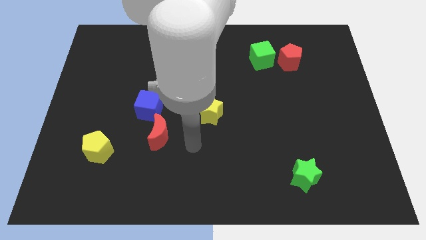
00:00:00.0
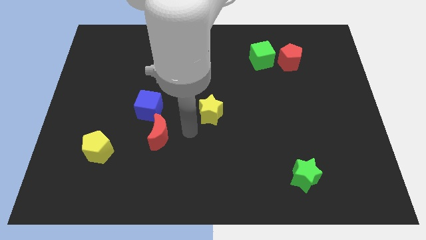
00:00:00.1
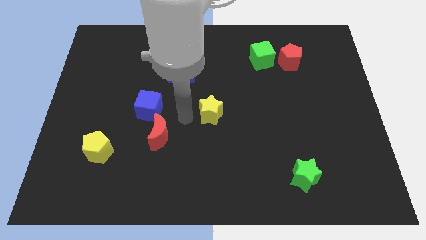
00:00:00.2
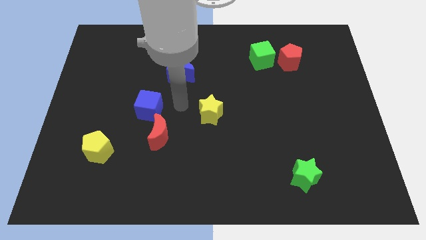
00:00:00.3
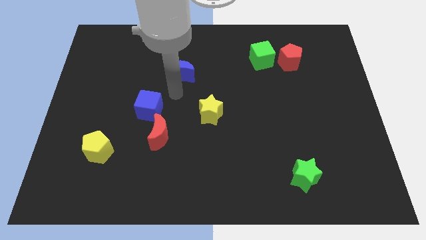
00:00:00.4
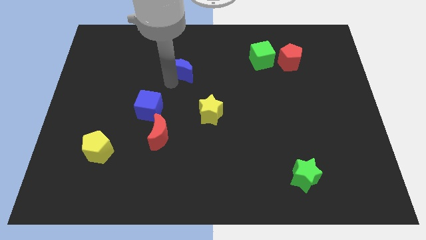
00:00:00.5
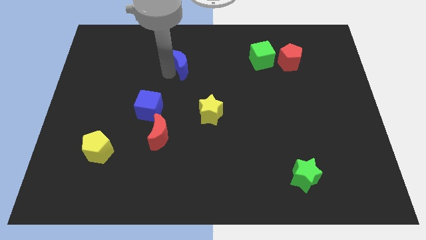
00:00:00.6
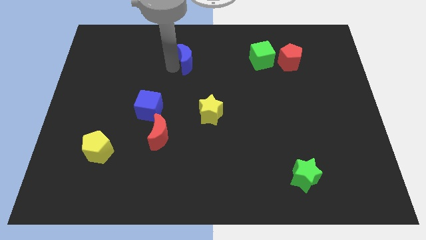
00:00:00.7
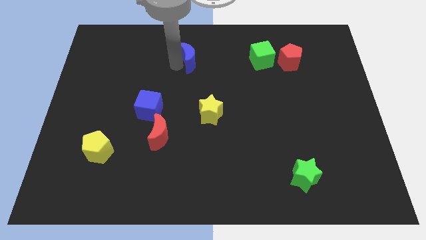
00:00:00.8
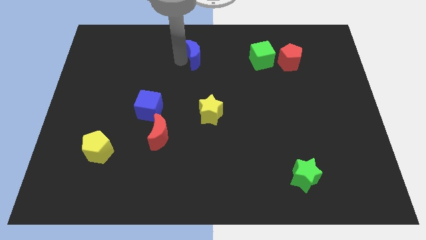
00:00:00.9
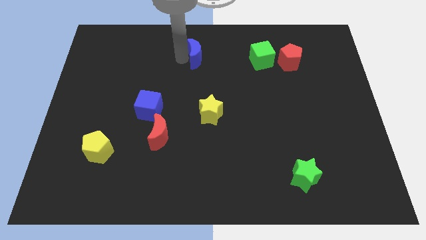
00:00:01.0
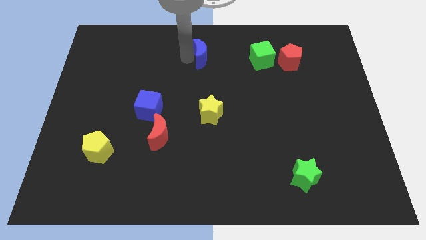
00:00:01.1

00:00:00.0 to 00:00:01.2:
move blue moon upwards slightly

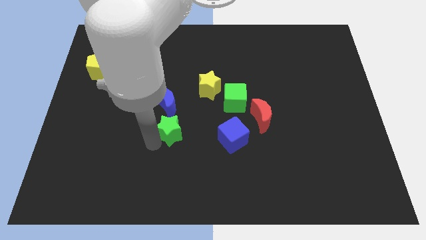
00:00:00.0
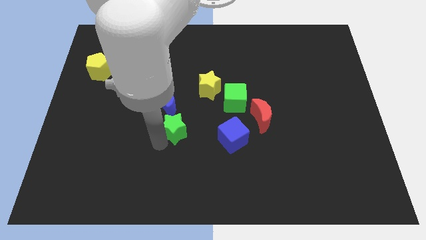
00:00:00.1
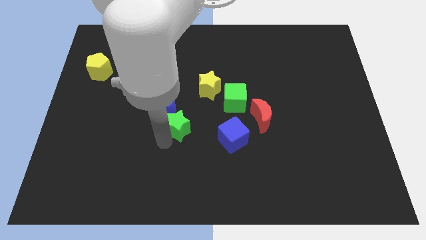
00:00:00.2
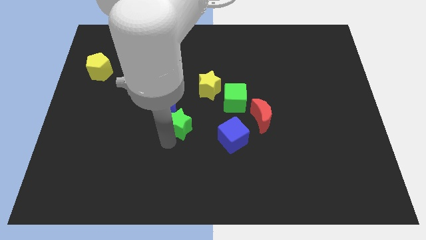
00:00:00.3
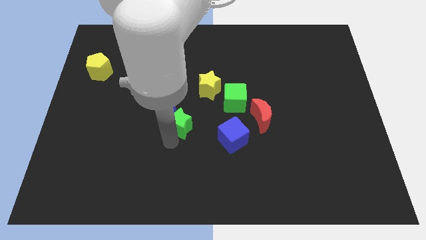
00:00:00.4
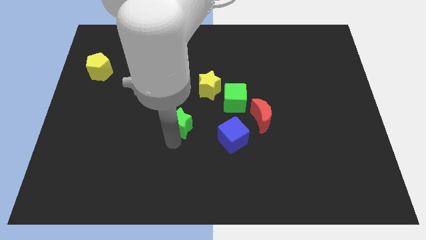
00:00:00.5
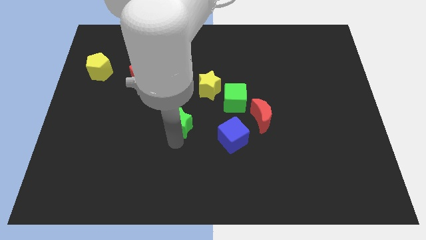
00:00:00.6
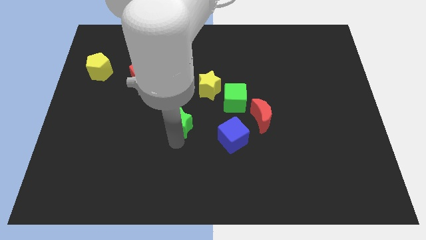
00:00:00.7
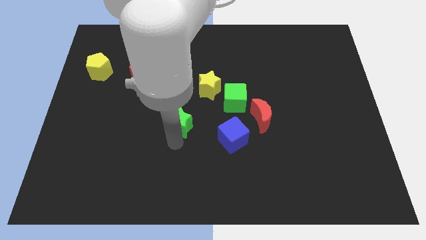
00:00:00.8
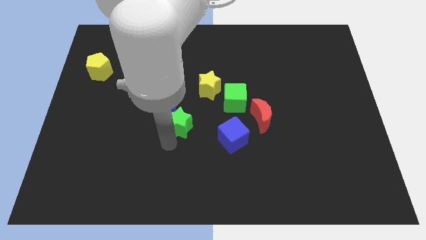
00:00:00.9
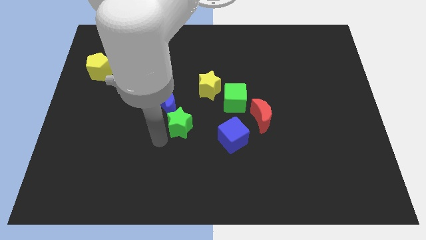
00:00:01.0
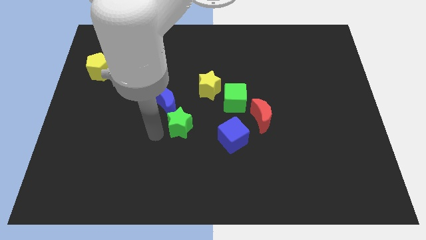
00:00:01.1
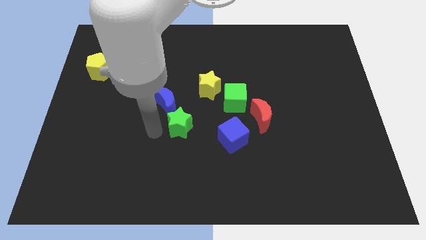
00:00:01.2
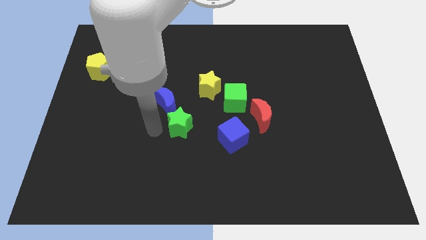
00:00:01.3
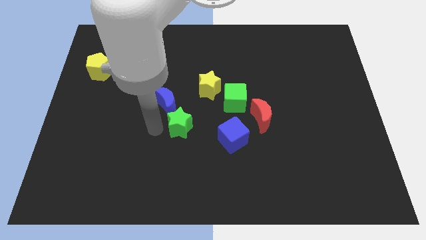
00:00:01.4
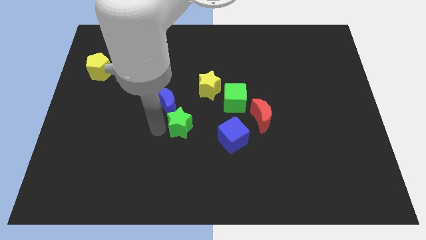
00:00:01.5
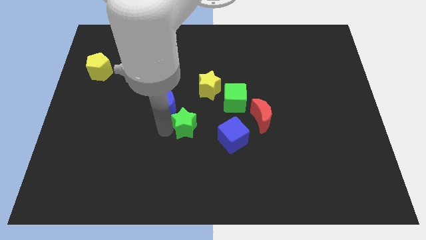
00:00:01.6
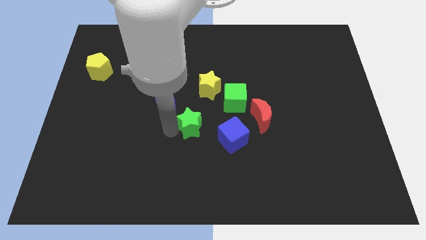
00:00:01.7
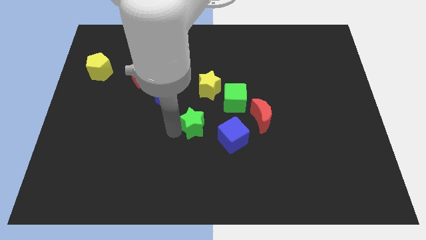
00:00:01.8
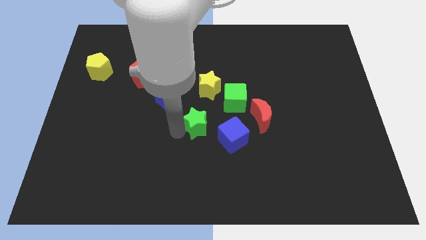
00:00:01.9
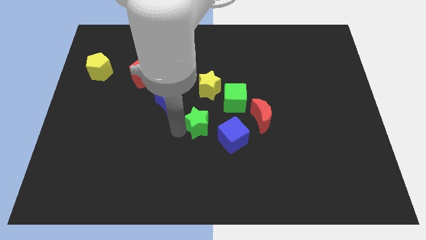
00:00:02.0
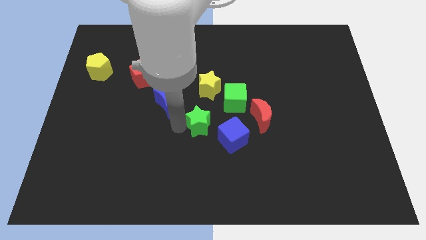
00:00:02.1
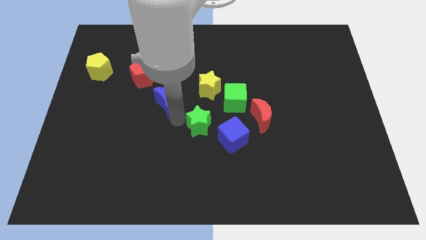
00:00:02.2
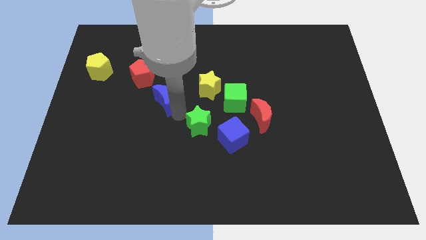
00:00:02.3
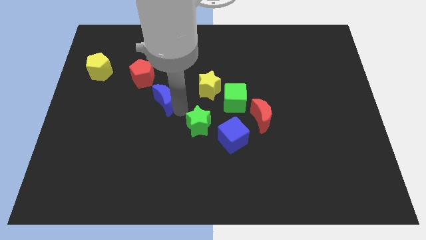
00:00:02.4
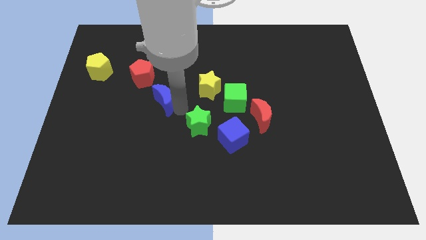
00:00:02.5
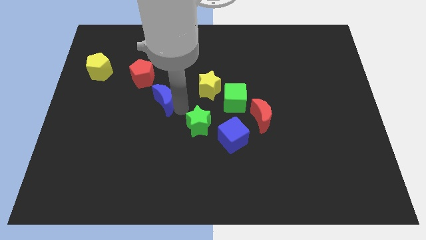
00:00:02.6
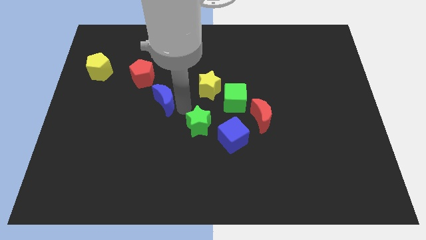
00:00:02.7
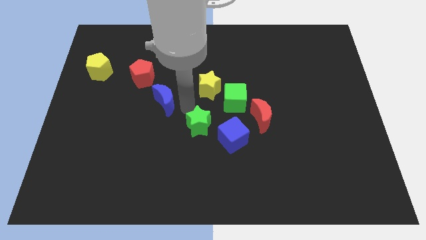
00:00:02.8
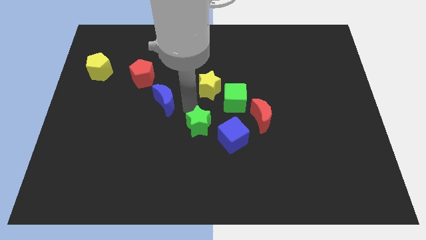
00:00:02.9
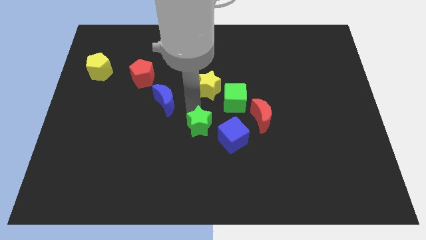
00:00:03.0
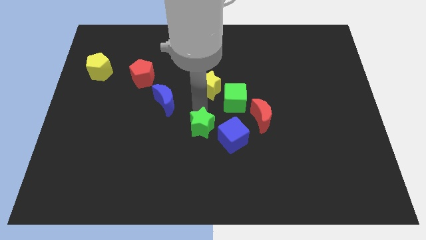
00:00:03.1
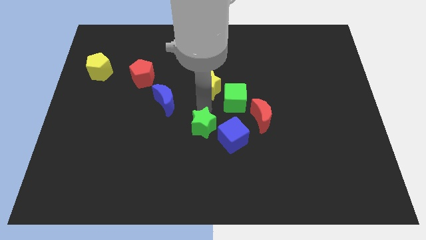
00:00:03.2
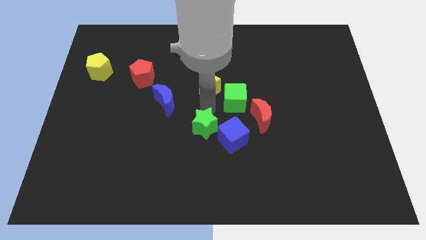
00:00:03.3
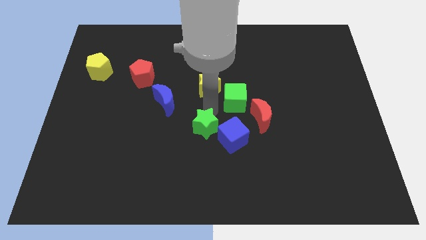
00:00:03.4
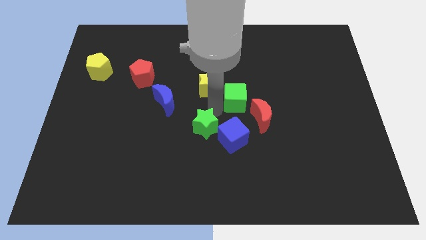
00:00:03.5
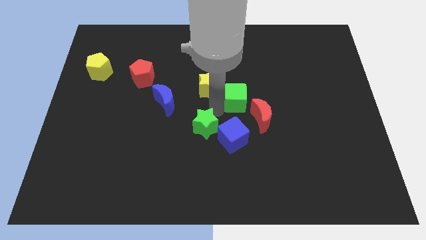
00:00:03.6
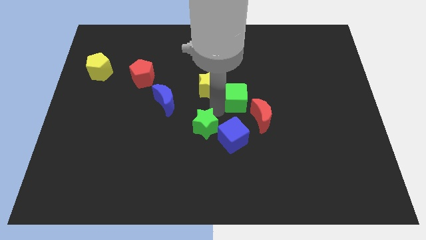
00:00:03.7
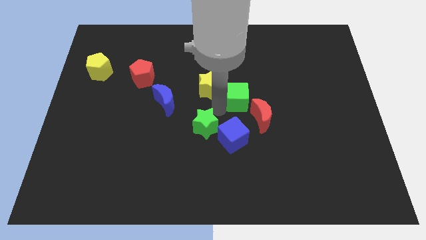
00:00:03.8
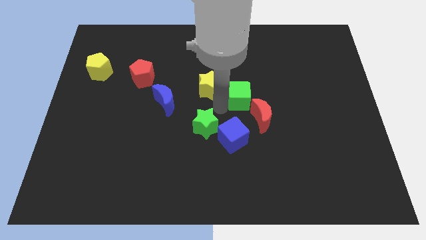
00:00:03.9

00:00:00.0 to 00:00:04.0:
place green star vertical to yellow star

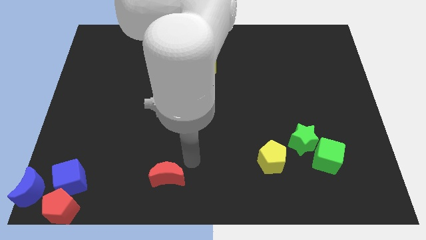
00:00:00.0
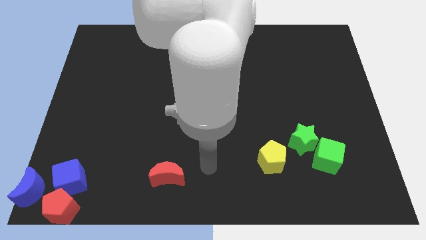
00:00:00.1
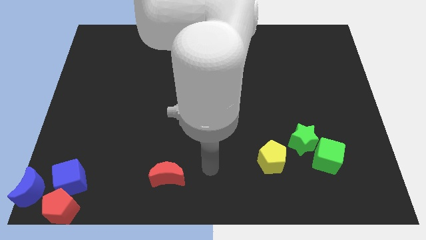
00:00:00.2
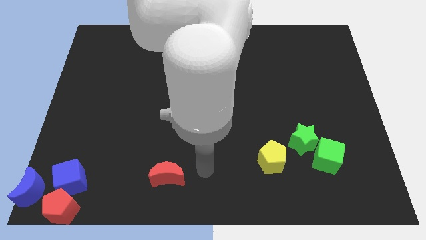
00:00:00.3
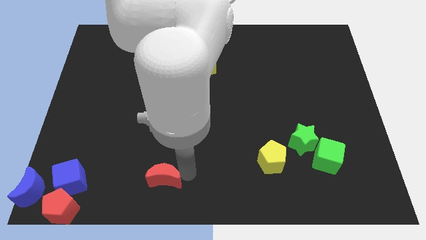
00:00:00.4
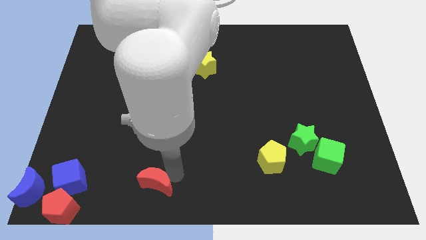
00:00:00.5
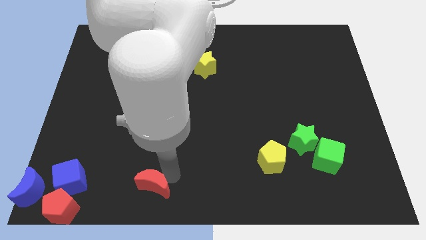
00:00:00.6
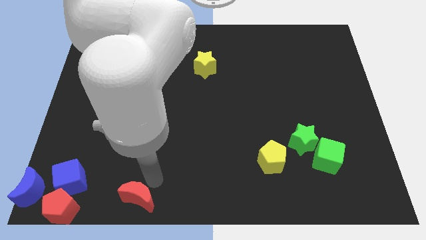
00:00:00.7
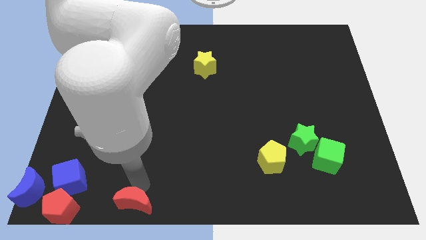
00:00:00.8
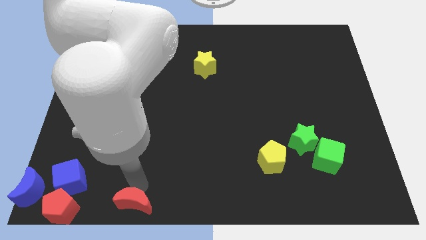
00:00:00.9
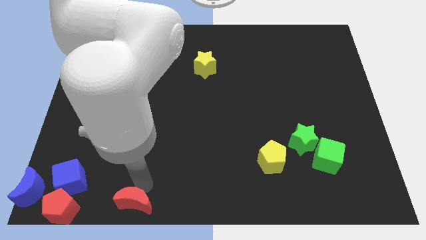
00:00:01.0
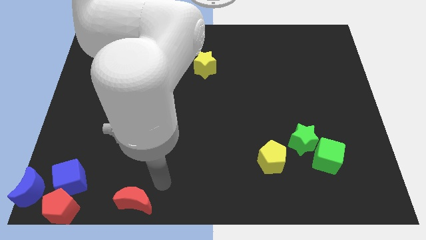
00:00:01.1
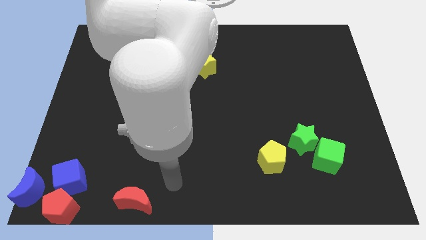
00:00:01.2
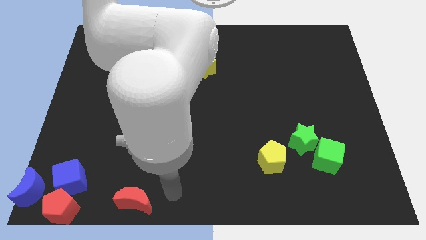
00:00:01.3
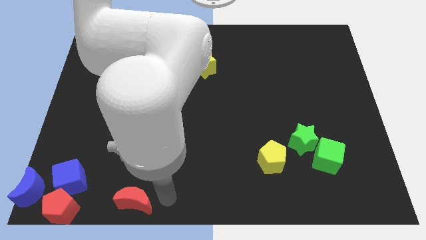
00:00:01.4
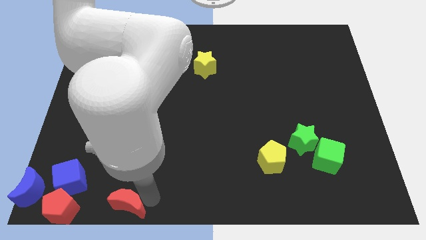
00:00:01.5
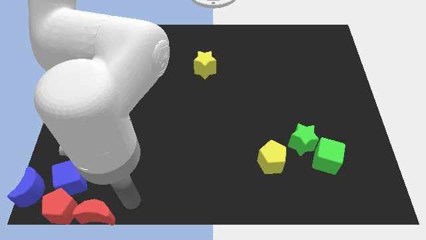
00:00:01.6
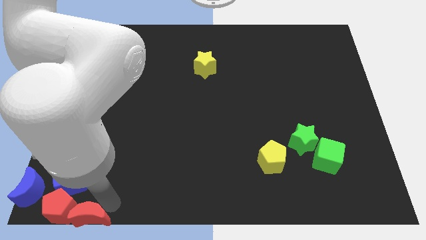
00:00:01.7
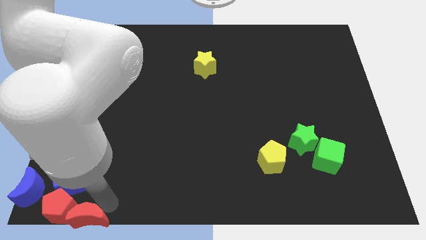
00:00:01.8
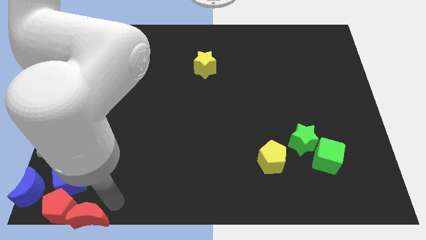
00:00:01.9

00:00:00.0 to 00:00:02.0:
drag the red moon to the bottom left side of the board

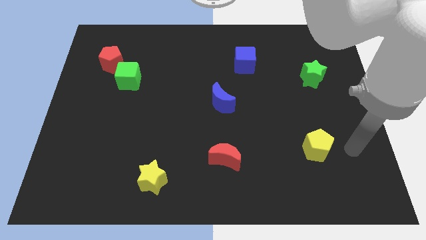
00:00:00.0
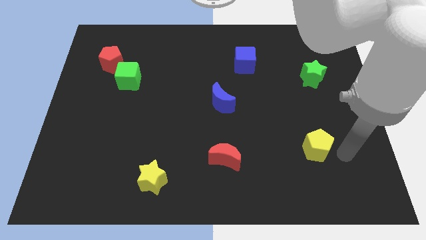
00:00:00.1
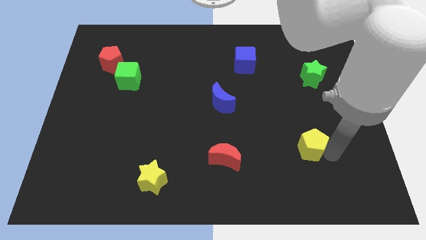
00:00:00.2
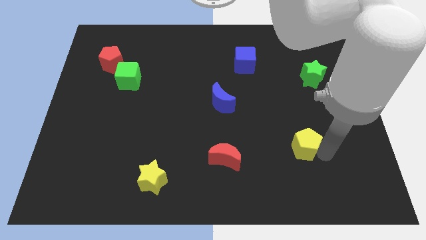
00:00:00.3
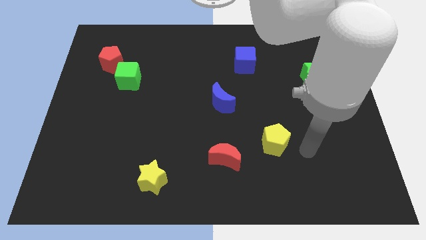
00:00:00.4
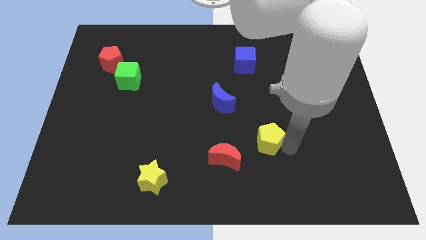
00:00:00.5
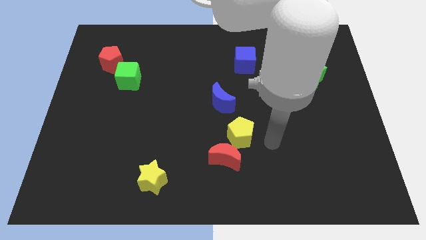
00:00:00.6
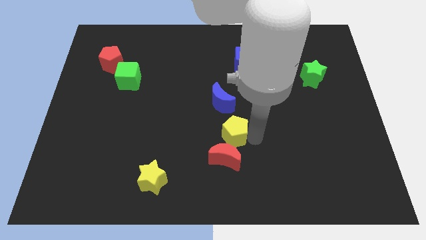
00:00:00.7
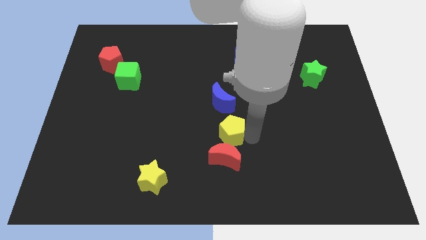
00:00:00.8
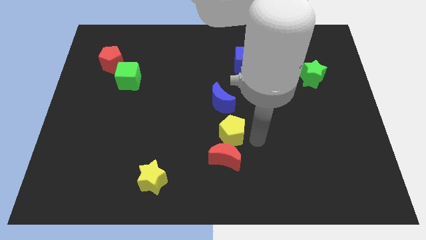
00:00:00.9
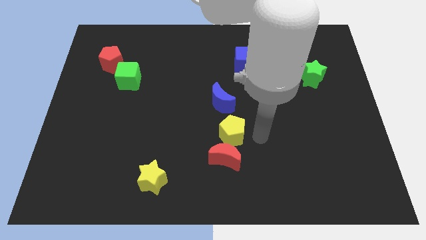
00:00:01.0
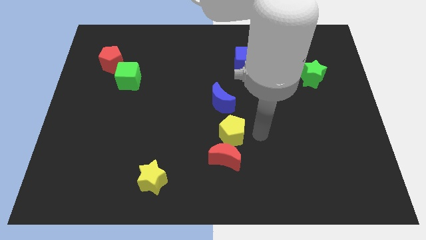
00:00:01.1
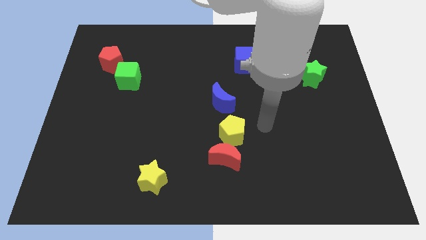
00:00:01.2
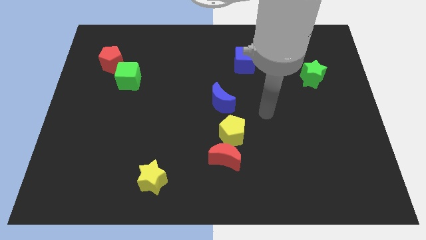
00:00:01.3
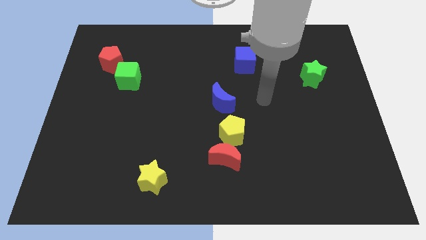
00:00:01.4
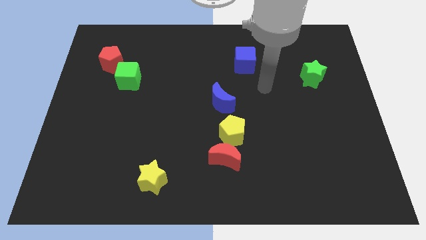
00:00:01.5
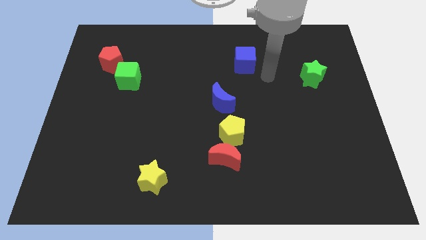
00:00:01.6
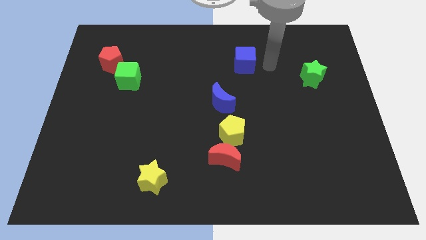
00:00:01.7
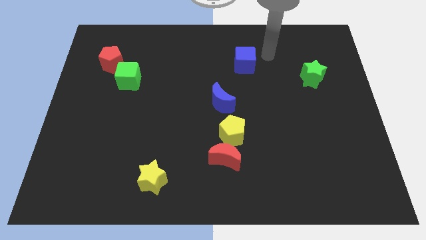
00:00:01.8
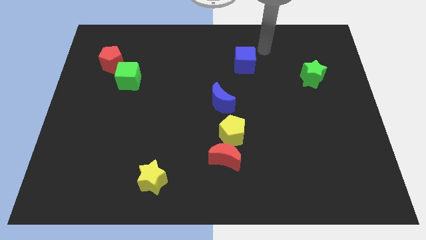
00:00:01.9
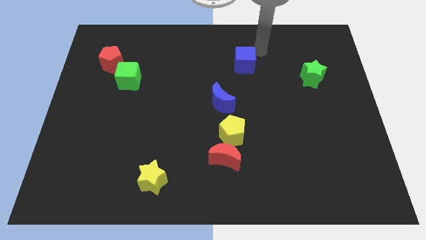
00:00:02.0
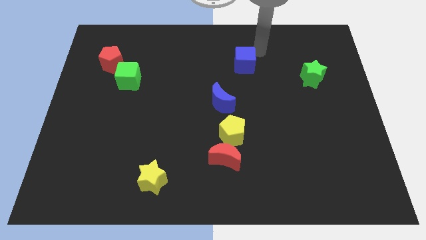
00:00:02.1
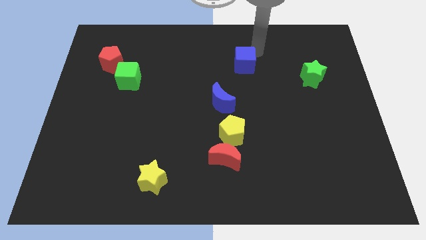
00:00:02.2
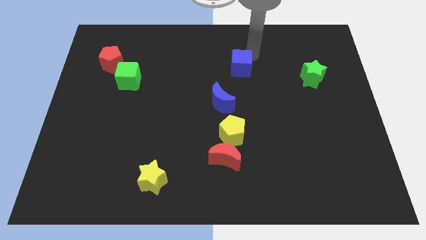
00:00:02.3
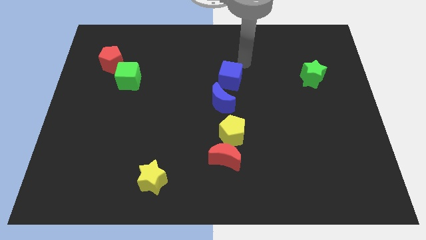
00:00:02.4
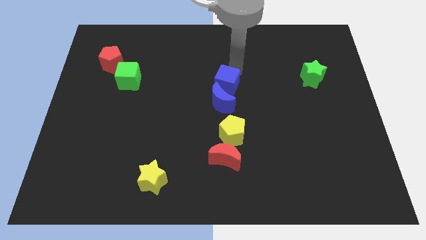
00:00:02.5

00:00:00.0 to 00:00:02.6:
move the yellow pentagon and blue cube into red and blue moons
